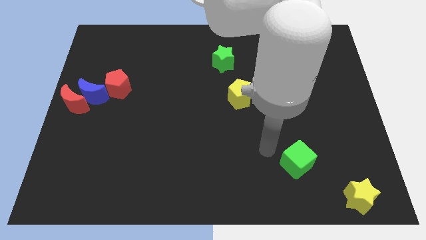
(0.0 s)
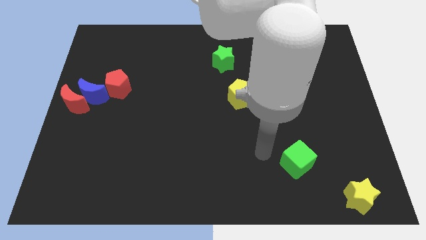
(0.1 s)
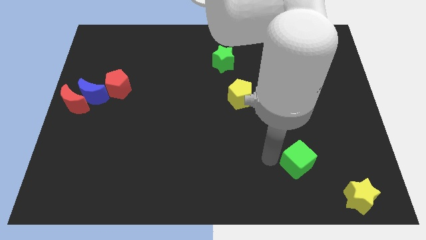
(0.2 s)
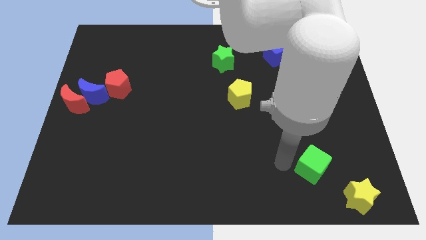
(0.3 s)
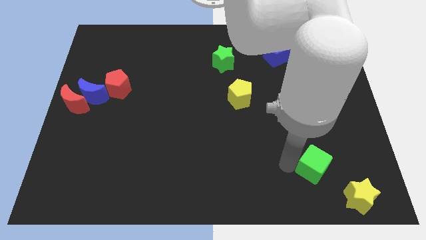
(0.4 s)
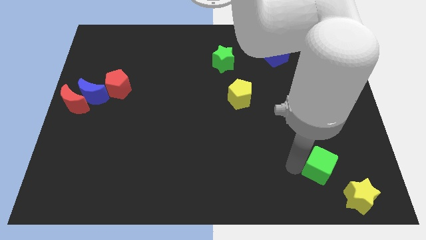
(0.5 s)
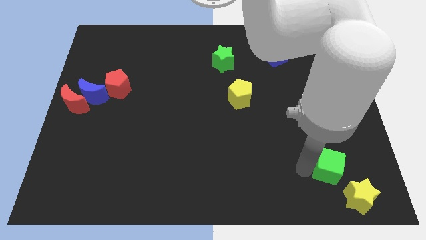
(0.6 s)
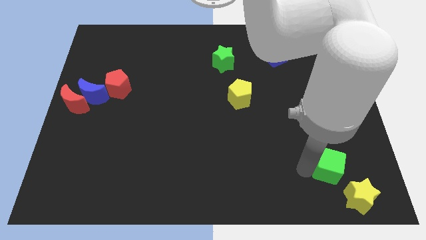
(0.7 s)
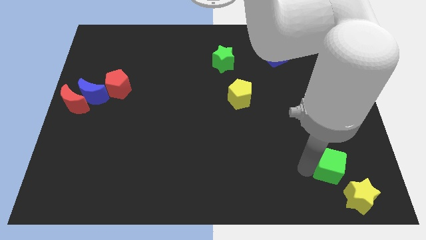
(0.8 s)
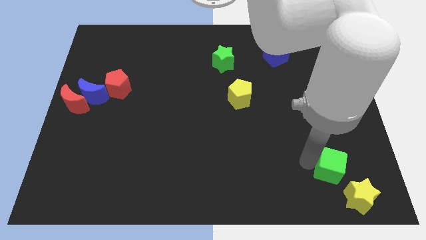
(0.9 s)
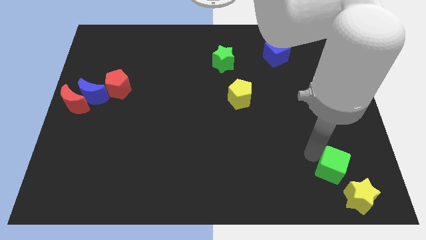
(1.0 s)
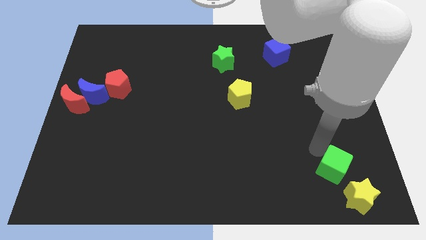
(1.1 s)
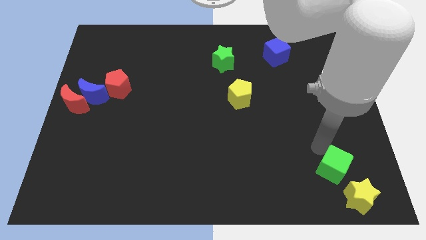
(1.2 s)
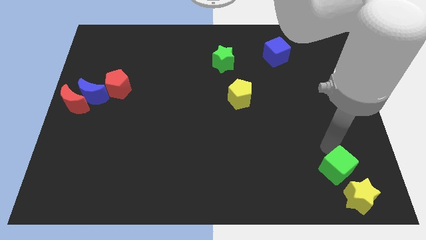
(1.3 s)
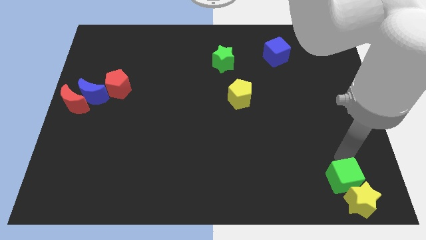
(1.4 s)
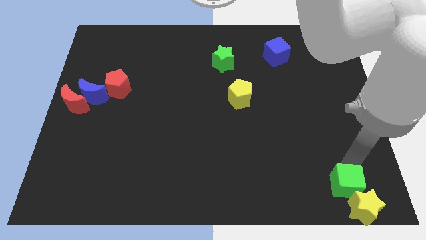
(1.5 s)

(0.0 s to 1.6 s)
push the green cube into the yellow star

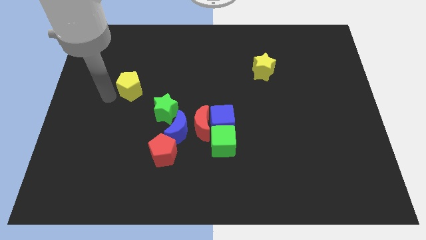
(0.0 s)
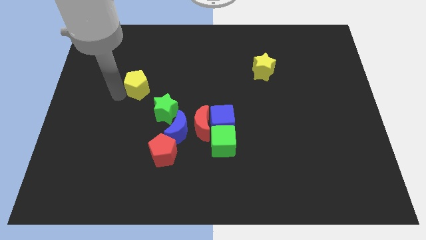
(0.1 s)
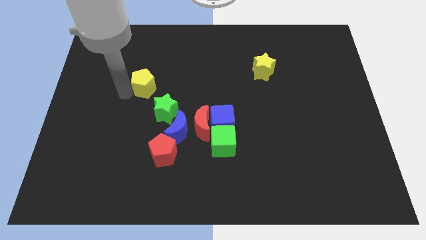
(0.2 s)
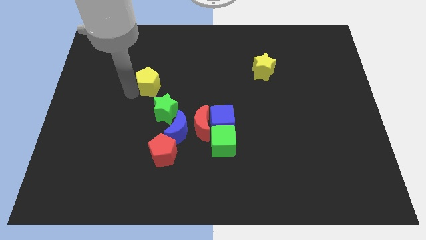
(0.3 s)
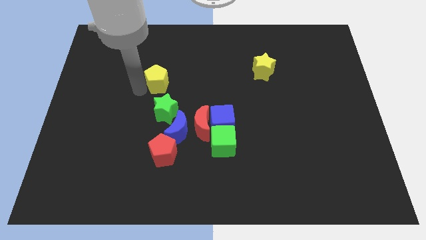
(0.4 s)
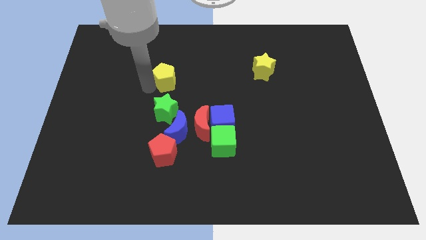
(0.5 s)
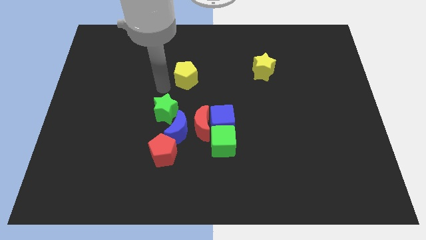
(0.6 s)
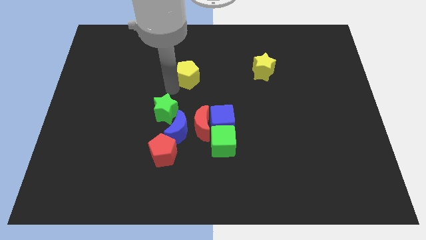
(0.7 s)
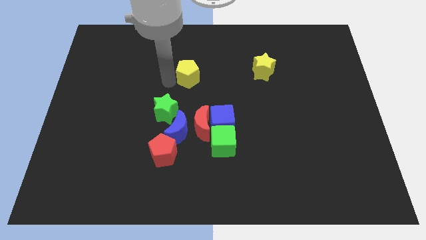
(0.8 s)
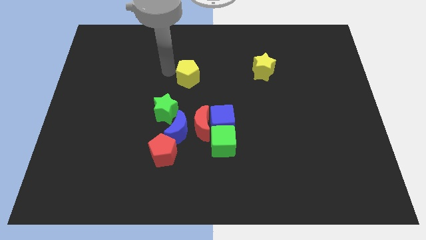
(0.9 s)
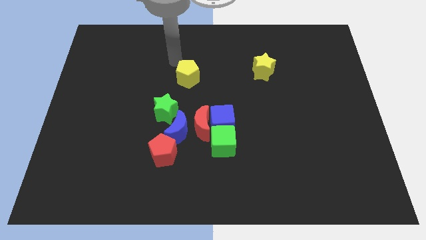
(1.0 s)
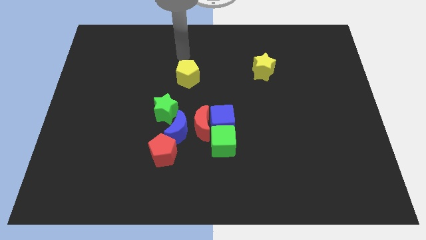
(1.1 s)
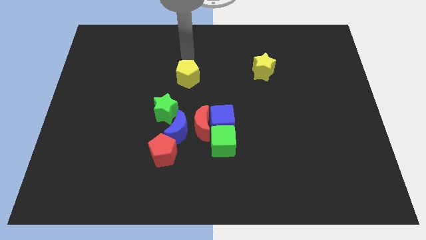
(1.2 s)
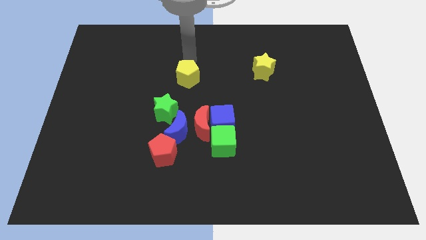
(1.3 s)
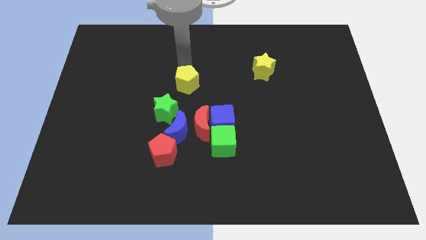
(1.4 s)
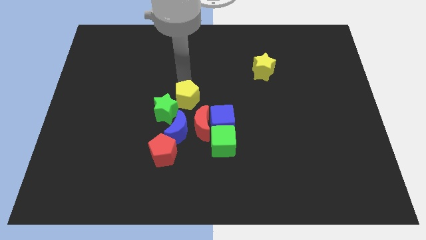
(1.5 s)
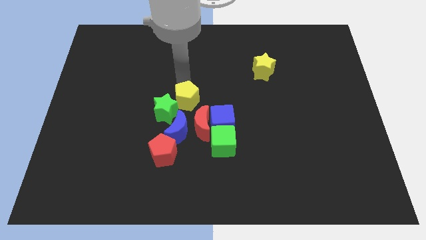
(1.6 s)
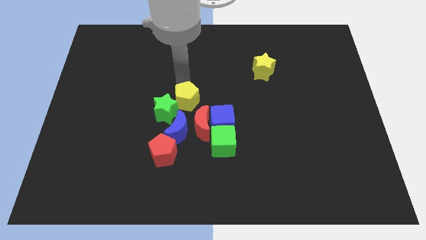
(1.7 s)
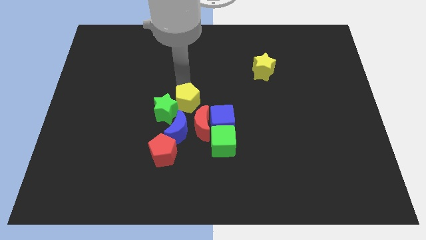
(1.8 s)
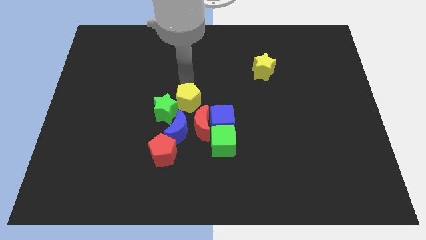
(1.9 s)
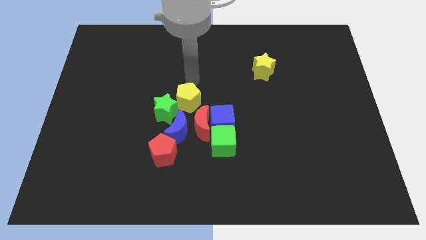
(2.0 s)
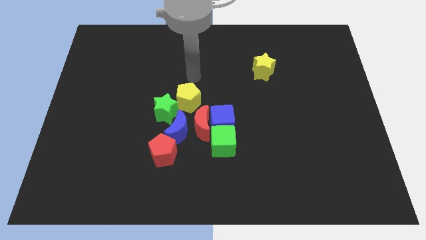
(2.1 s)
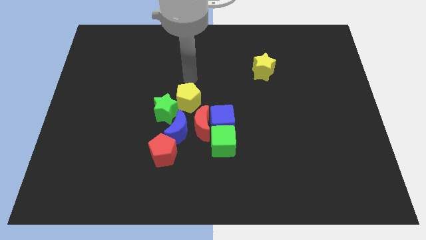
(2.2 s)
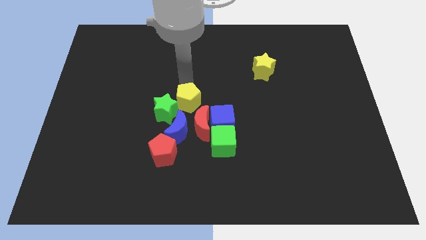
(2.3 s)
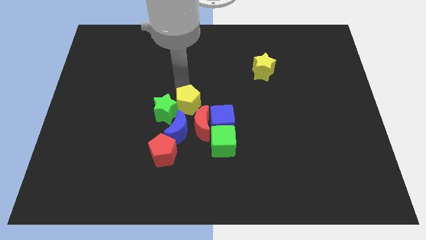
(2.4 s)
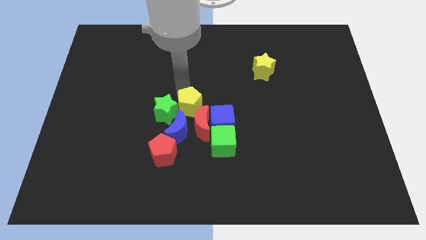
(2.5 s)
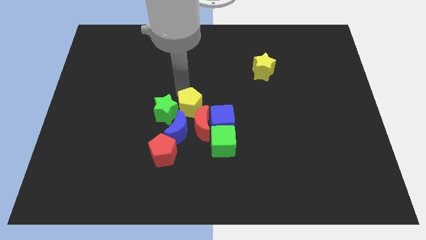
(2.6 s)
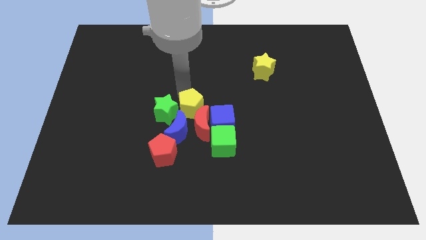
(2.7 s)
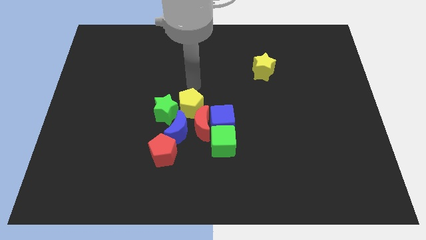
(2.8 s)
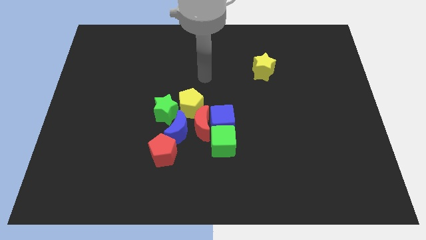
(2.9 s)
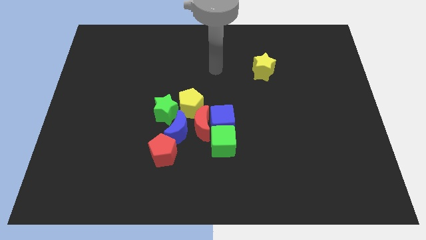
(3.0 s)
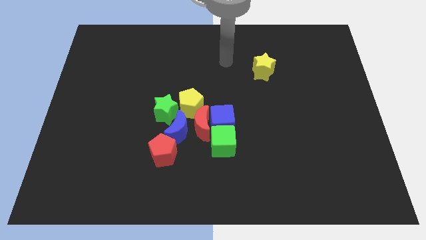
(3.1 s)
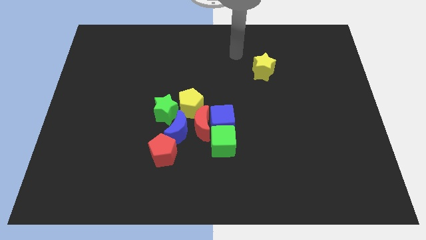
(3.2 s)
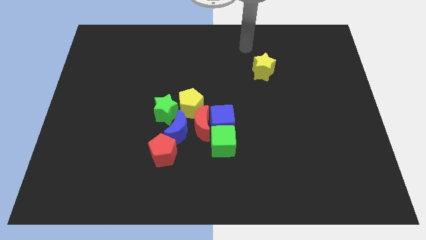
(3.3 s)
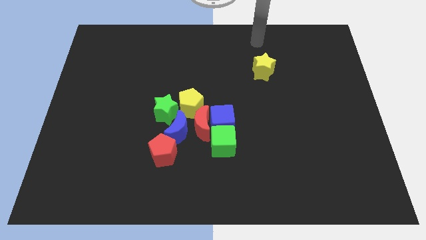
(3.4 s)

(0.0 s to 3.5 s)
move the yellow pentagon to the right side of the green star

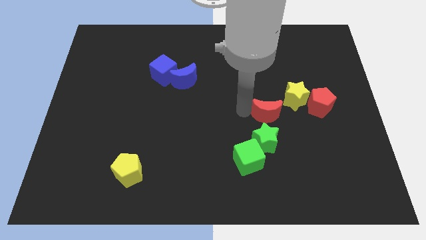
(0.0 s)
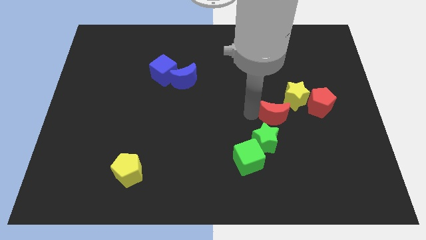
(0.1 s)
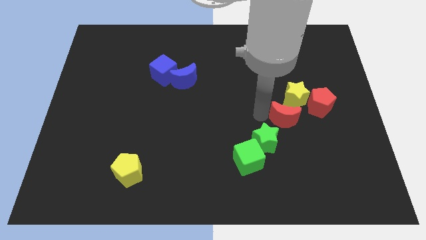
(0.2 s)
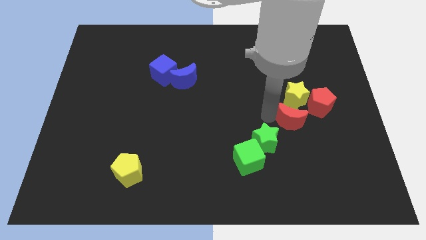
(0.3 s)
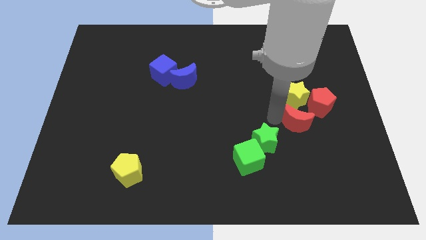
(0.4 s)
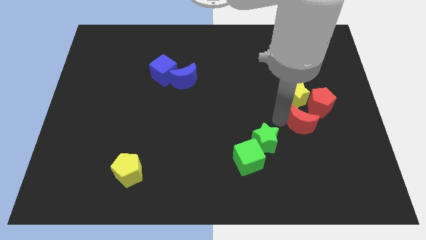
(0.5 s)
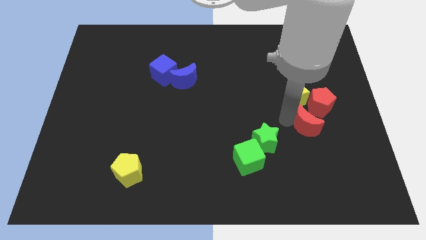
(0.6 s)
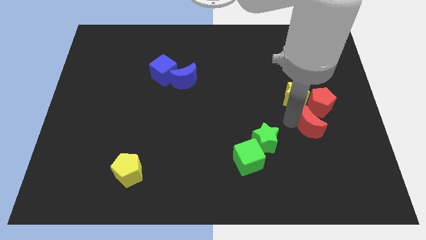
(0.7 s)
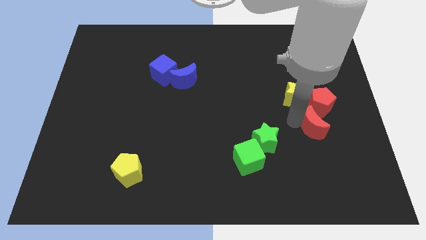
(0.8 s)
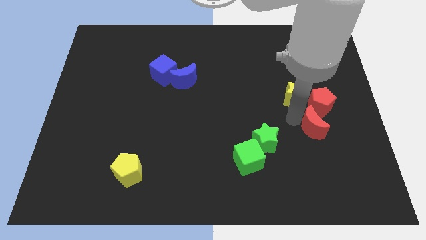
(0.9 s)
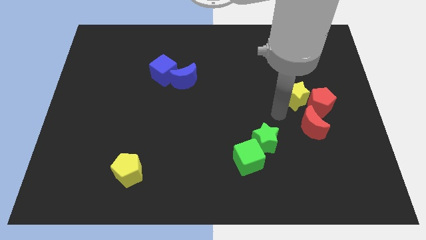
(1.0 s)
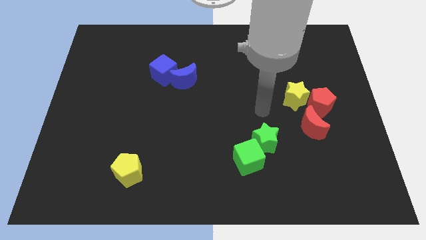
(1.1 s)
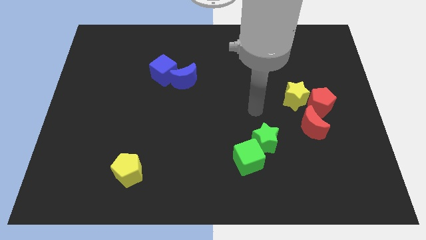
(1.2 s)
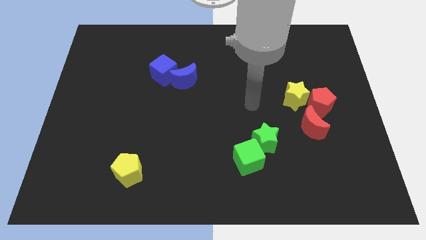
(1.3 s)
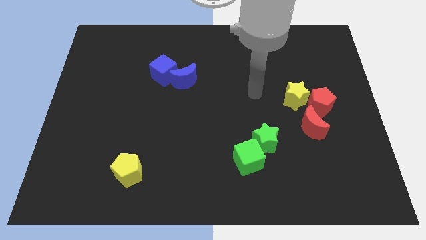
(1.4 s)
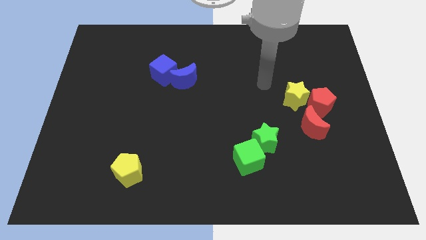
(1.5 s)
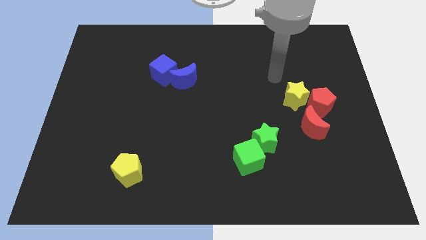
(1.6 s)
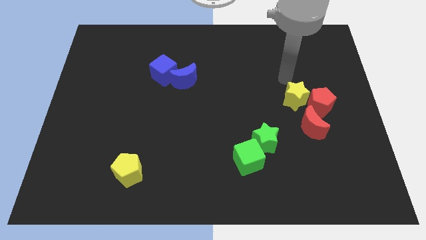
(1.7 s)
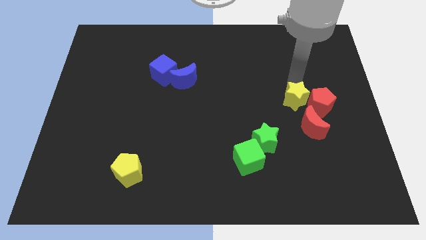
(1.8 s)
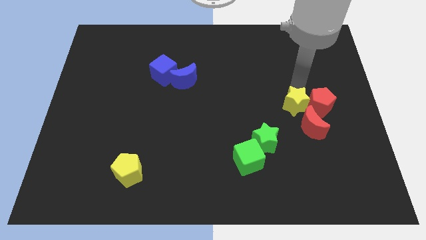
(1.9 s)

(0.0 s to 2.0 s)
move red crescent to the bottom of the red pentagon

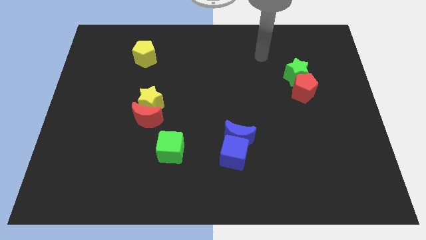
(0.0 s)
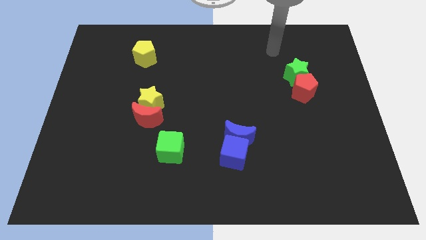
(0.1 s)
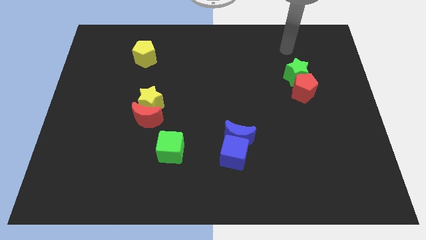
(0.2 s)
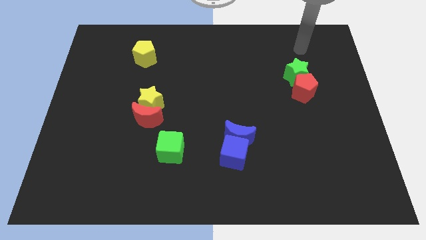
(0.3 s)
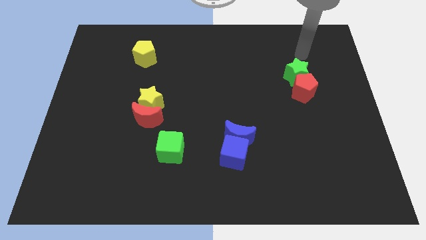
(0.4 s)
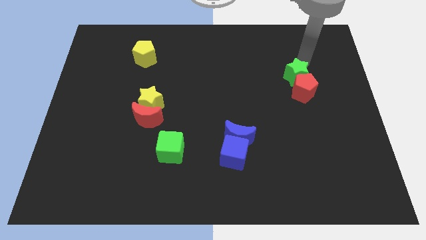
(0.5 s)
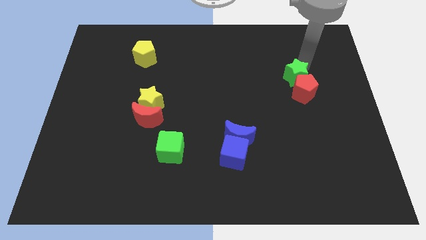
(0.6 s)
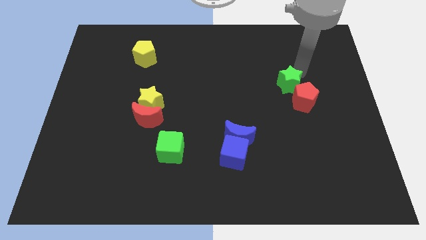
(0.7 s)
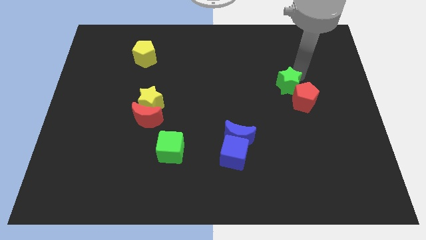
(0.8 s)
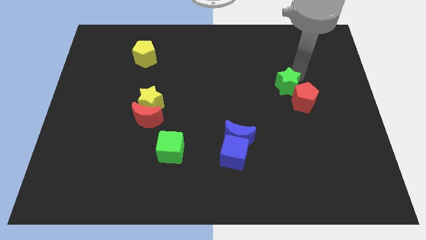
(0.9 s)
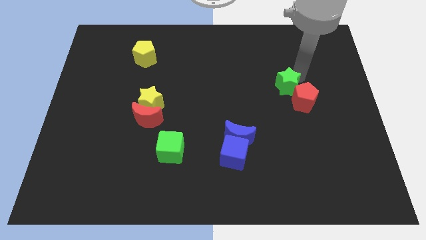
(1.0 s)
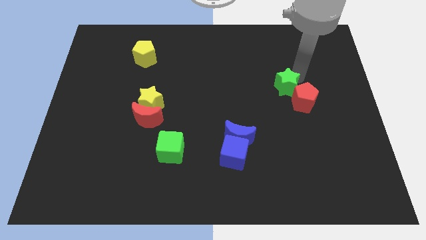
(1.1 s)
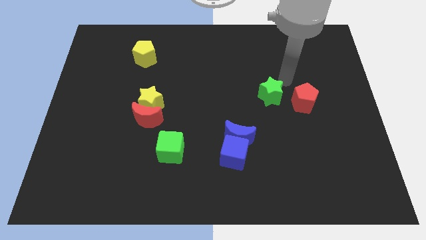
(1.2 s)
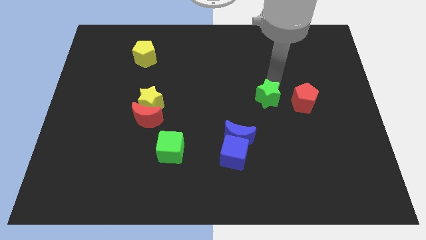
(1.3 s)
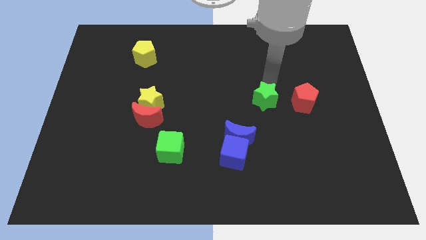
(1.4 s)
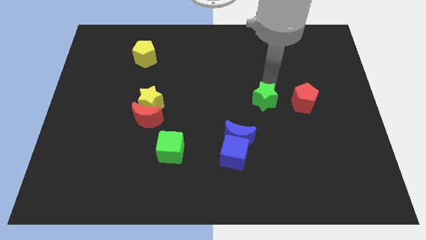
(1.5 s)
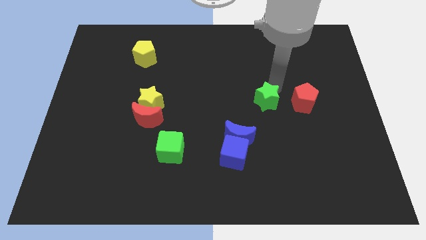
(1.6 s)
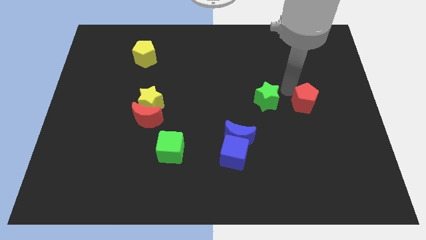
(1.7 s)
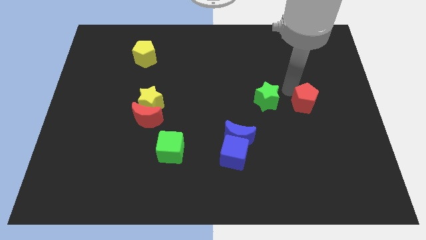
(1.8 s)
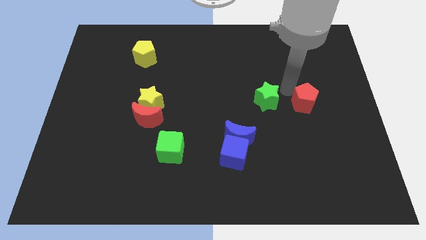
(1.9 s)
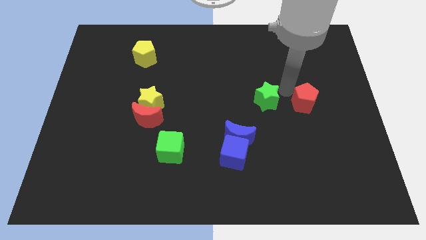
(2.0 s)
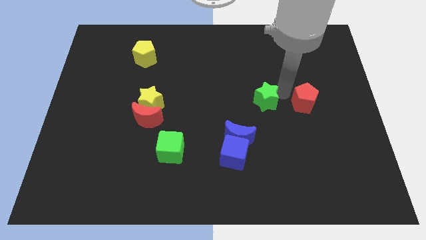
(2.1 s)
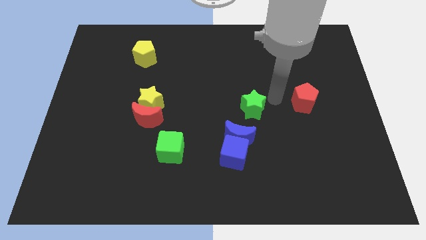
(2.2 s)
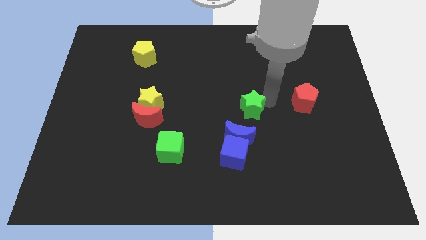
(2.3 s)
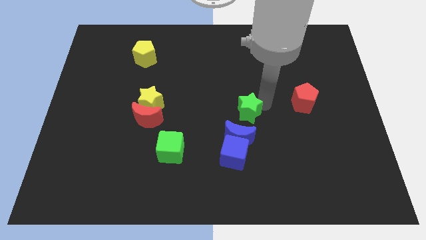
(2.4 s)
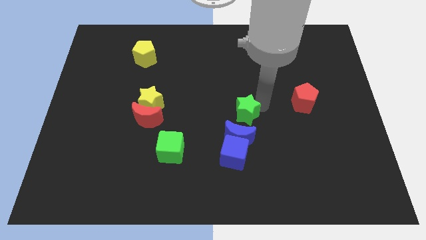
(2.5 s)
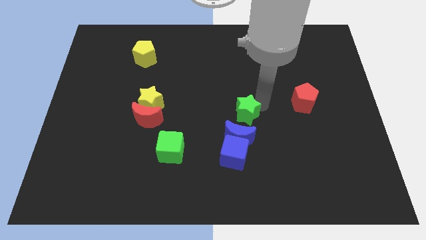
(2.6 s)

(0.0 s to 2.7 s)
move the green star above the blue moon
